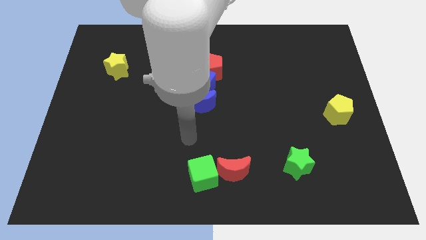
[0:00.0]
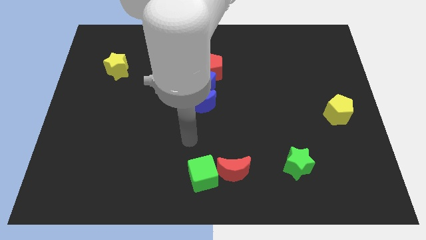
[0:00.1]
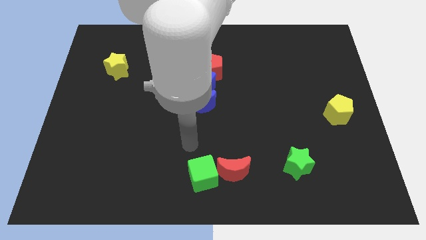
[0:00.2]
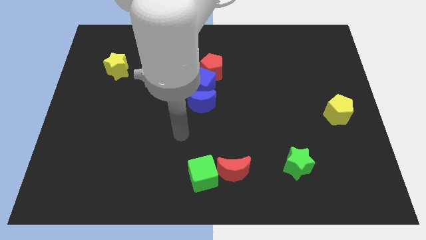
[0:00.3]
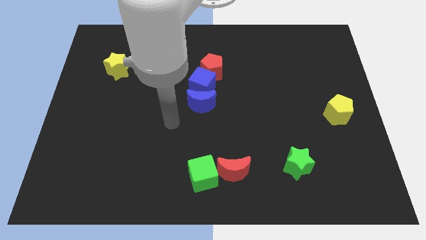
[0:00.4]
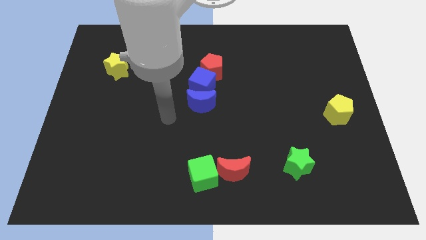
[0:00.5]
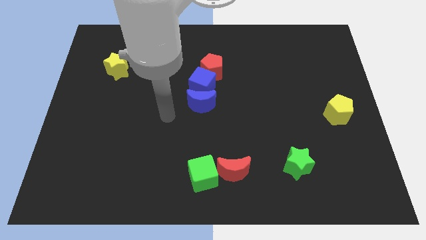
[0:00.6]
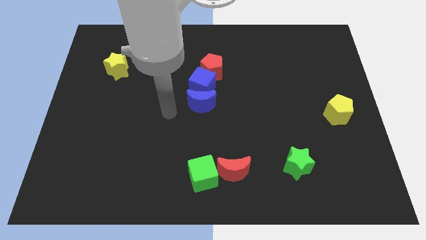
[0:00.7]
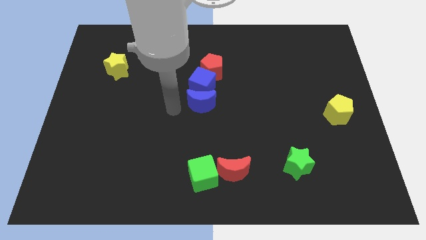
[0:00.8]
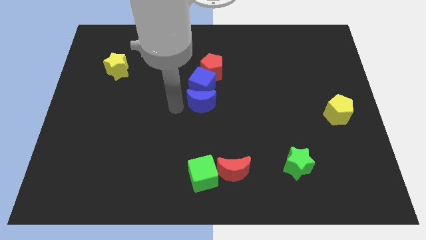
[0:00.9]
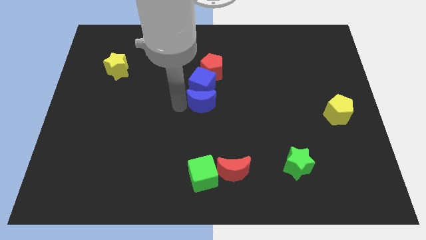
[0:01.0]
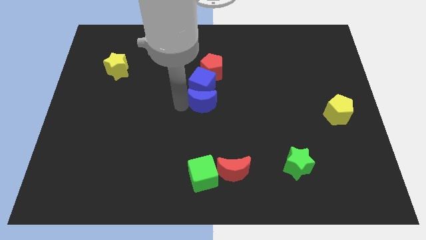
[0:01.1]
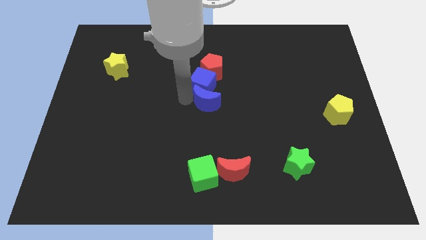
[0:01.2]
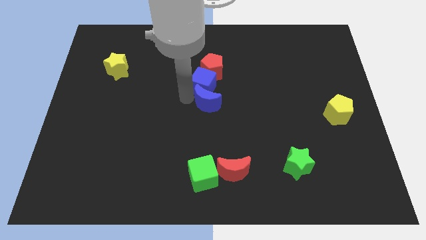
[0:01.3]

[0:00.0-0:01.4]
touch the blue moon

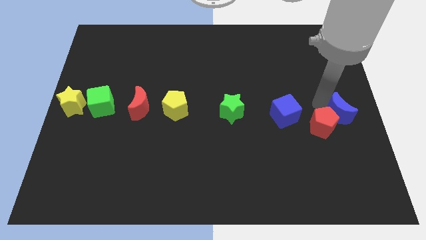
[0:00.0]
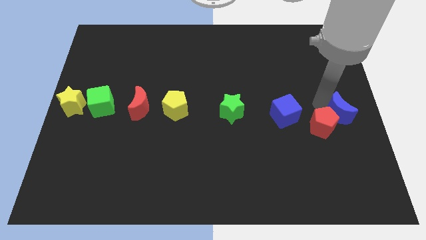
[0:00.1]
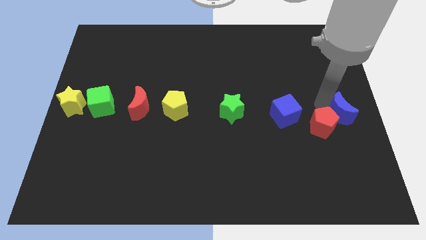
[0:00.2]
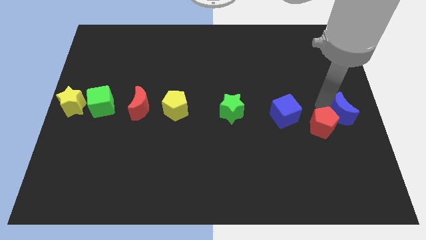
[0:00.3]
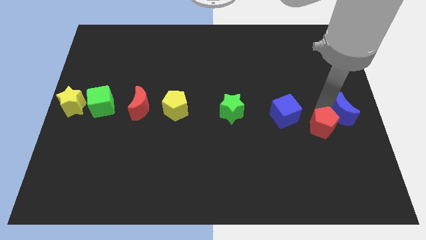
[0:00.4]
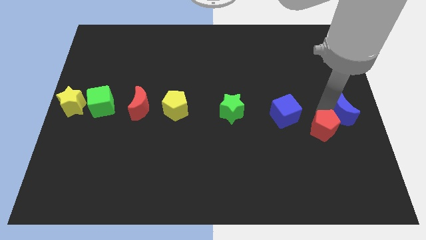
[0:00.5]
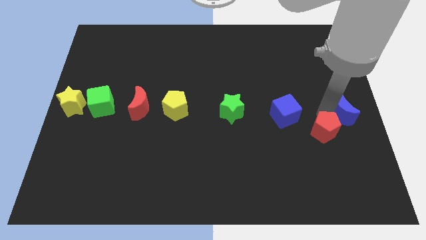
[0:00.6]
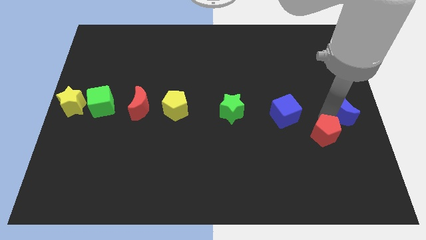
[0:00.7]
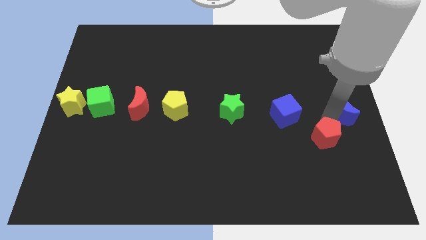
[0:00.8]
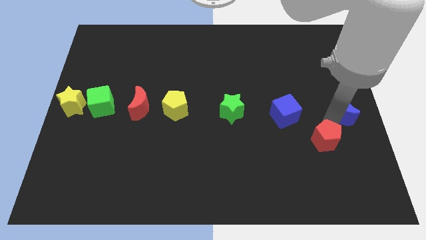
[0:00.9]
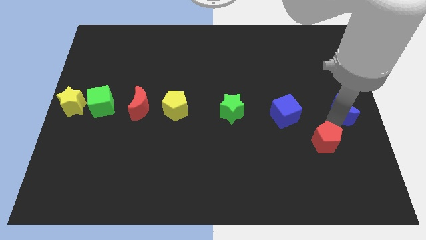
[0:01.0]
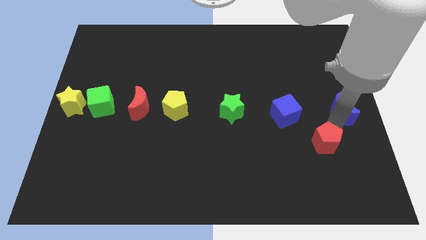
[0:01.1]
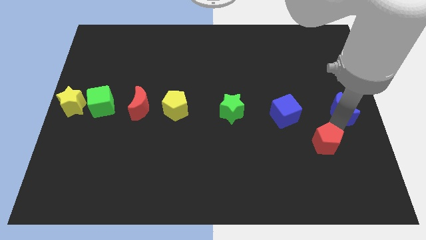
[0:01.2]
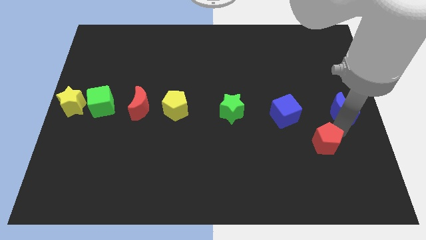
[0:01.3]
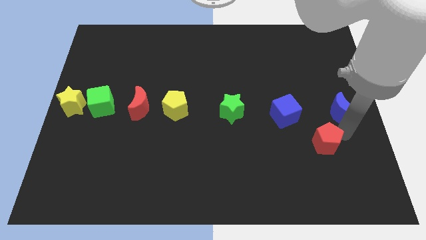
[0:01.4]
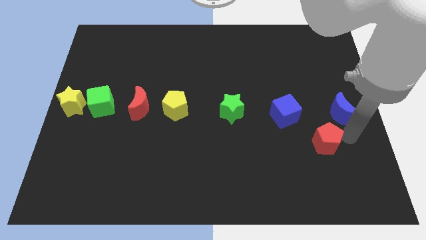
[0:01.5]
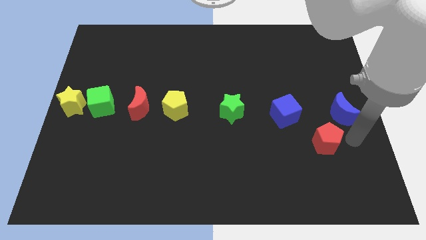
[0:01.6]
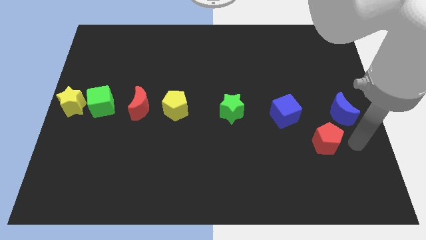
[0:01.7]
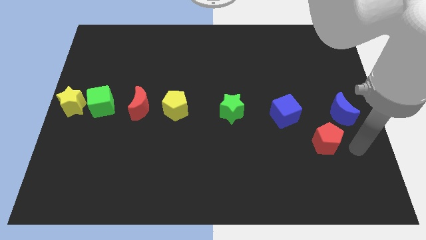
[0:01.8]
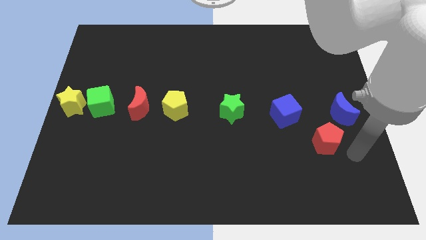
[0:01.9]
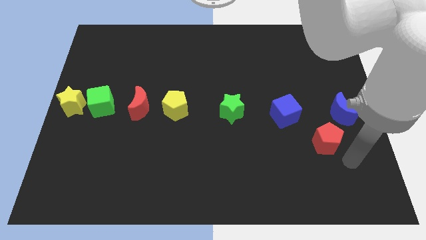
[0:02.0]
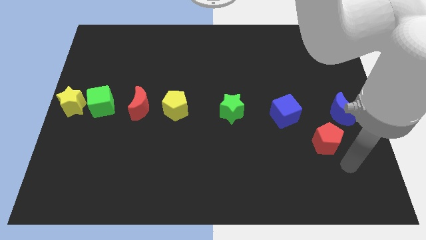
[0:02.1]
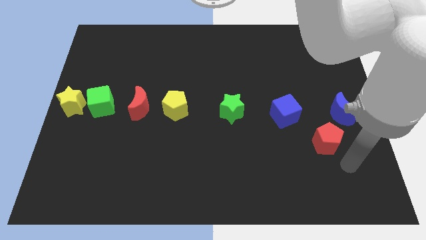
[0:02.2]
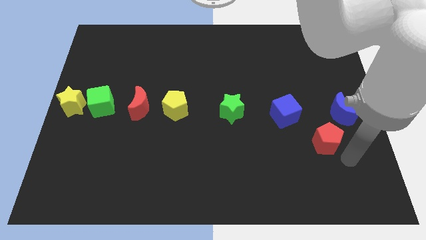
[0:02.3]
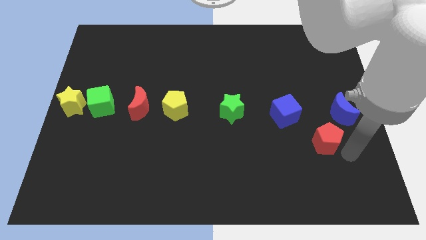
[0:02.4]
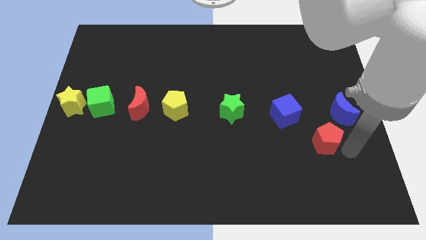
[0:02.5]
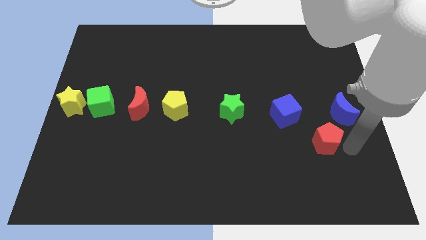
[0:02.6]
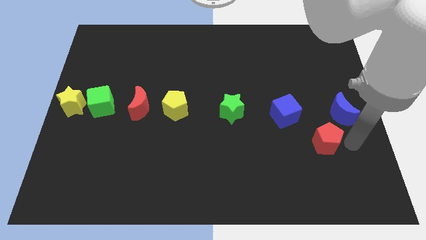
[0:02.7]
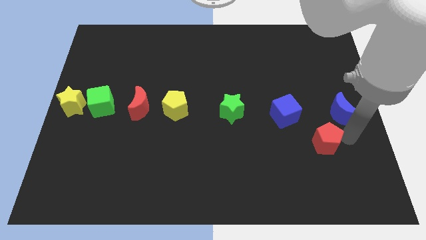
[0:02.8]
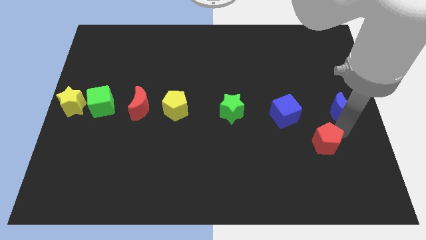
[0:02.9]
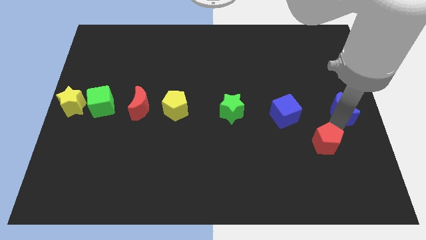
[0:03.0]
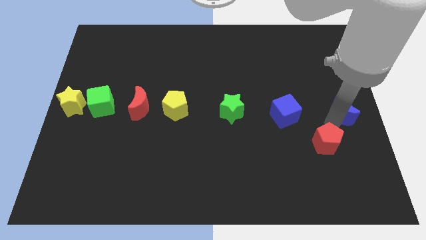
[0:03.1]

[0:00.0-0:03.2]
move the red pentagon to the bottom left of the blue crescent

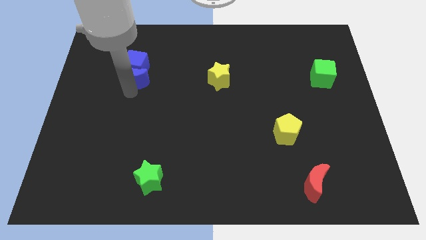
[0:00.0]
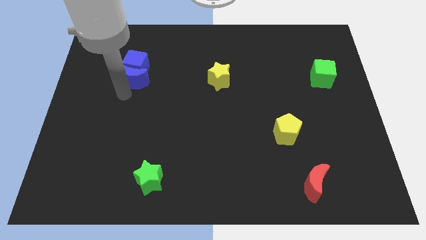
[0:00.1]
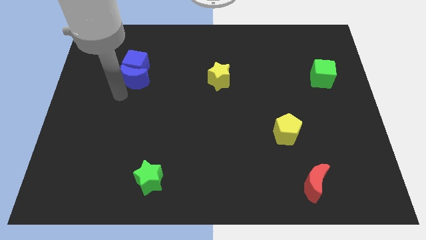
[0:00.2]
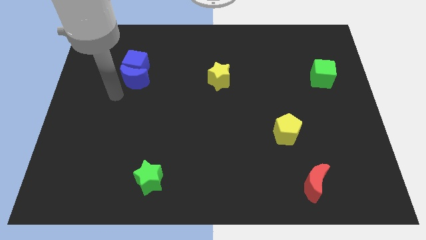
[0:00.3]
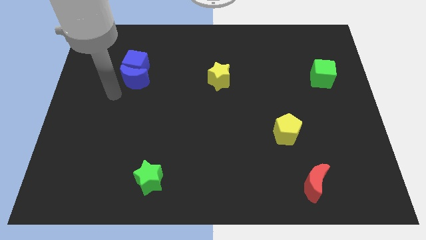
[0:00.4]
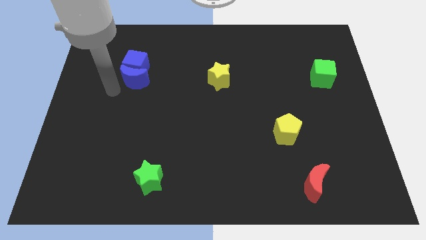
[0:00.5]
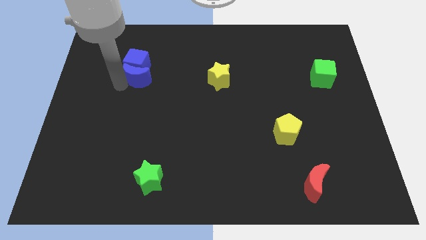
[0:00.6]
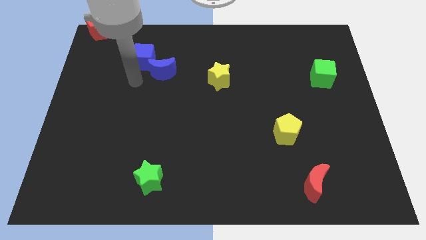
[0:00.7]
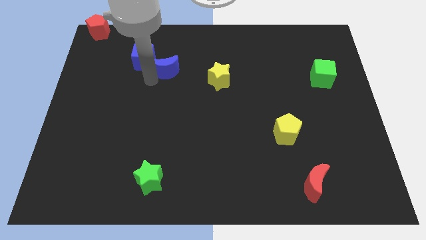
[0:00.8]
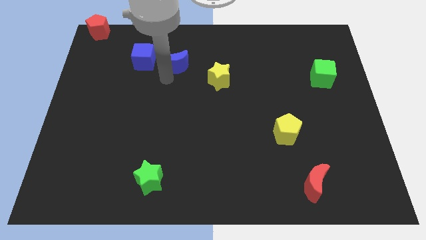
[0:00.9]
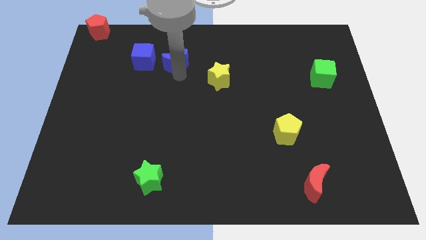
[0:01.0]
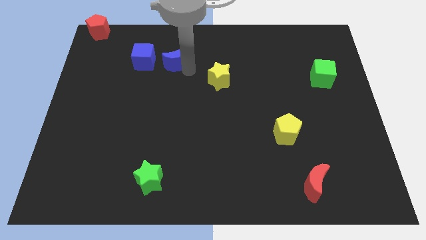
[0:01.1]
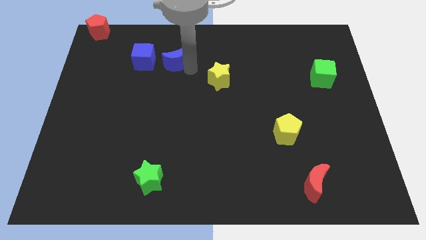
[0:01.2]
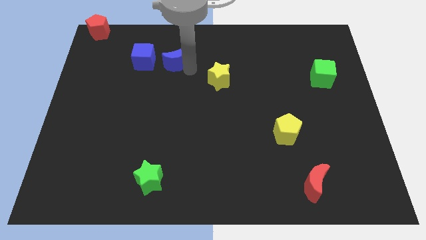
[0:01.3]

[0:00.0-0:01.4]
separate the blue crescent from the blue cube

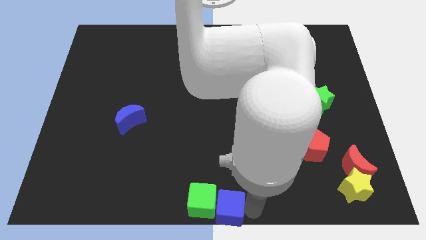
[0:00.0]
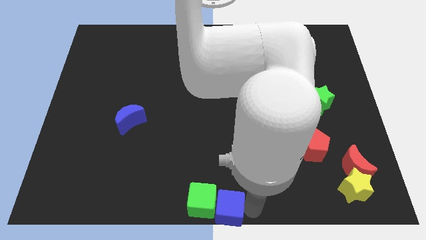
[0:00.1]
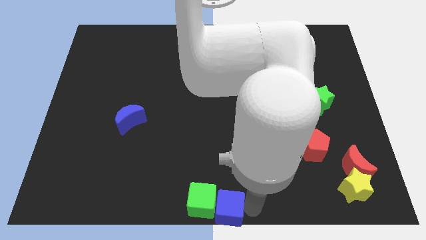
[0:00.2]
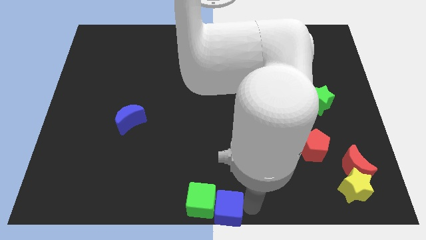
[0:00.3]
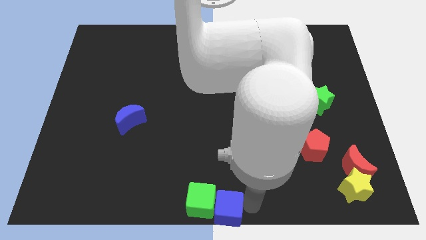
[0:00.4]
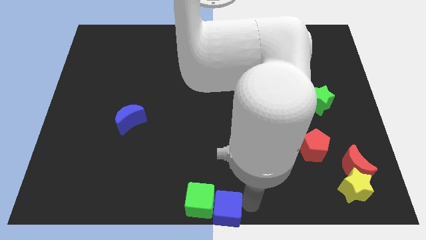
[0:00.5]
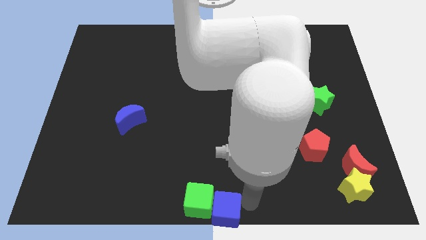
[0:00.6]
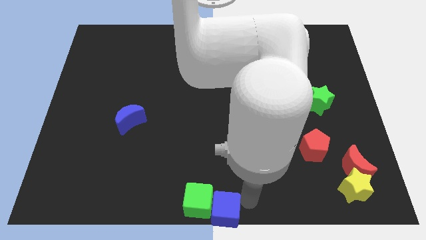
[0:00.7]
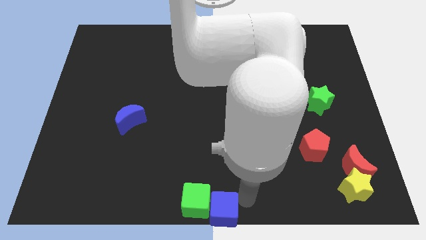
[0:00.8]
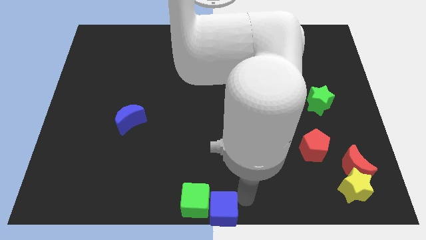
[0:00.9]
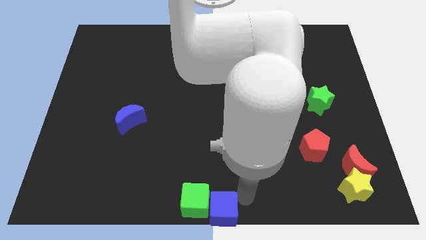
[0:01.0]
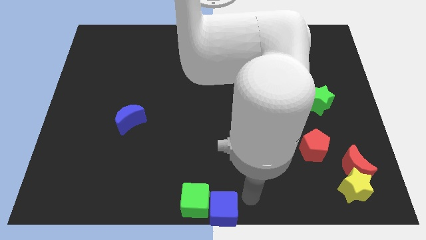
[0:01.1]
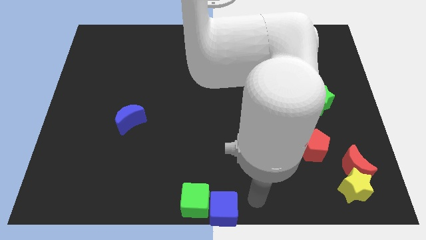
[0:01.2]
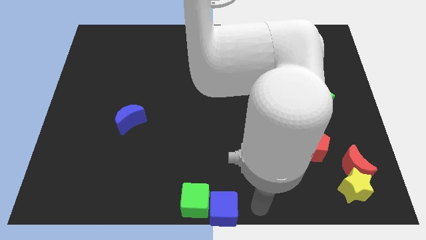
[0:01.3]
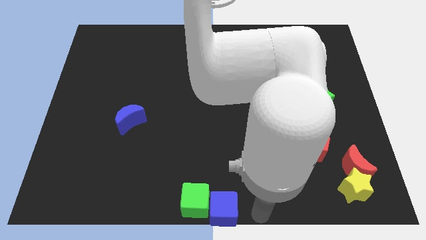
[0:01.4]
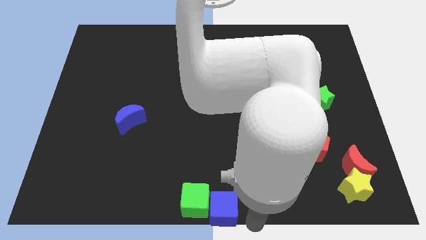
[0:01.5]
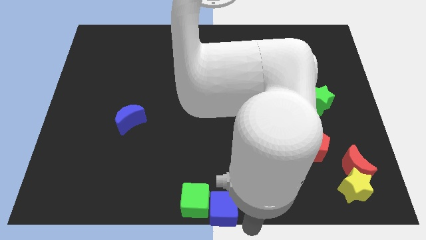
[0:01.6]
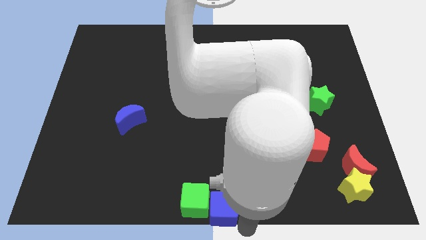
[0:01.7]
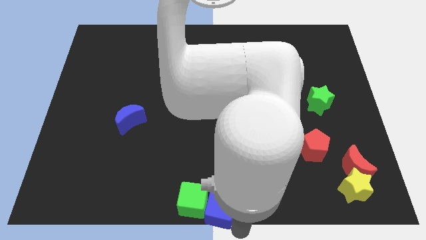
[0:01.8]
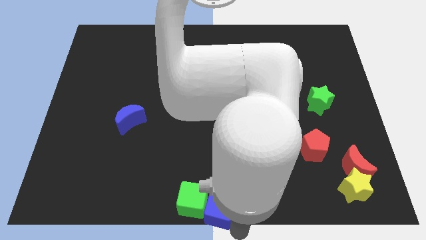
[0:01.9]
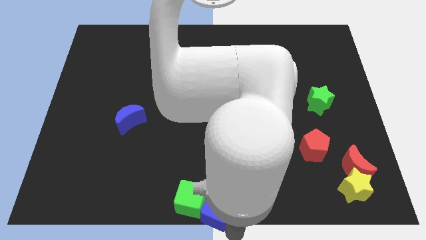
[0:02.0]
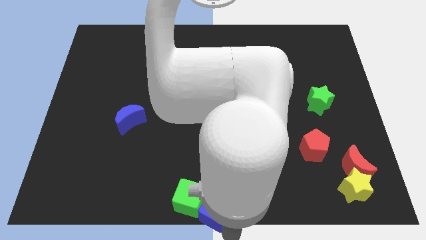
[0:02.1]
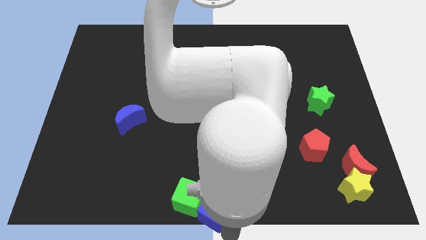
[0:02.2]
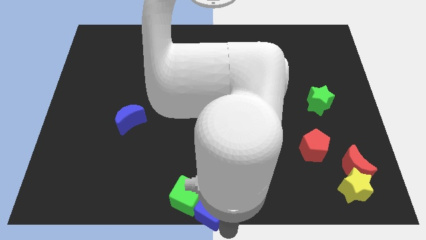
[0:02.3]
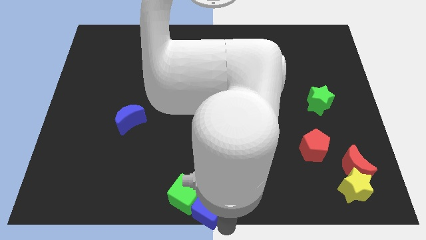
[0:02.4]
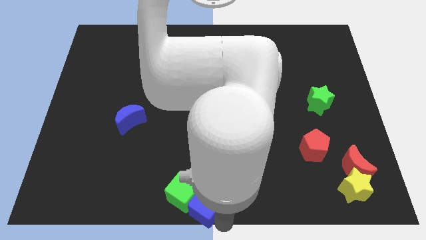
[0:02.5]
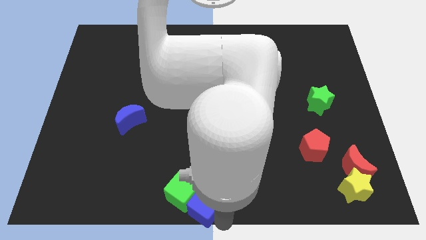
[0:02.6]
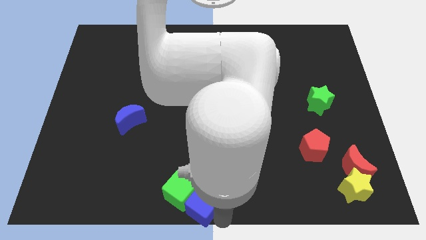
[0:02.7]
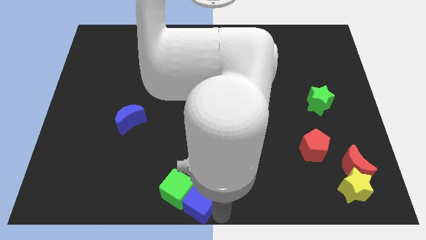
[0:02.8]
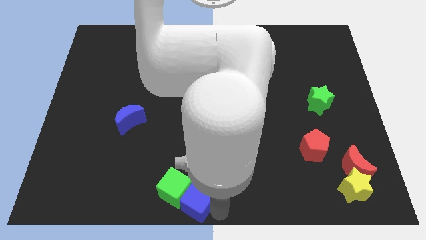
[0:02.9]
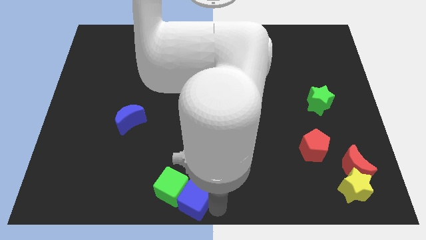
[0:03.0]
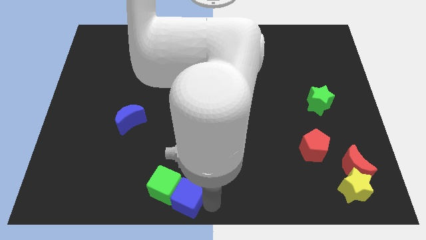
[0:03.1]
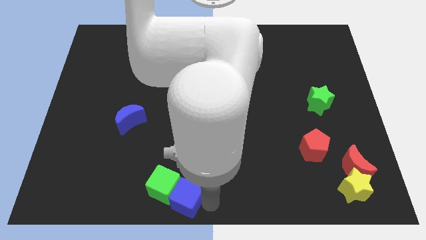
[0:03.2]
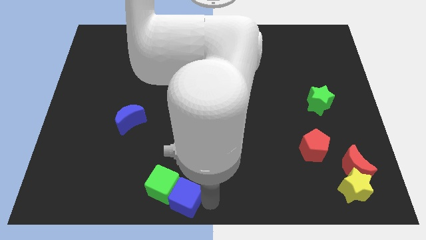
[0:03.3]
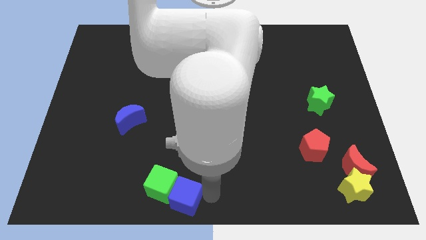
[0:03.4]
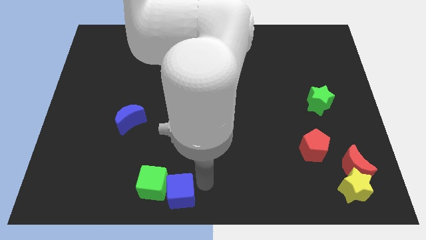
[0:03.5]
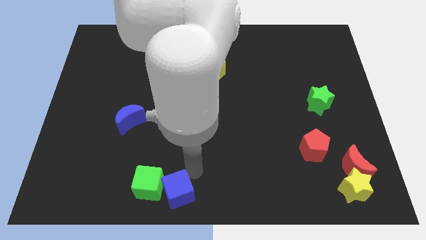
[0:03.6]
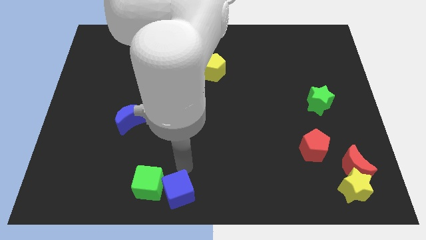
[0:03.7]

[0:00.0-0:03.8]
push green cube and blue cube to the left
